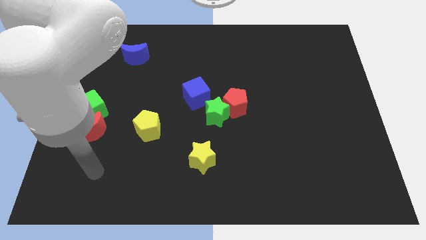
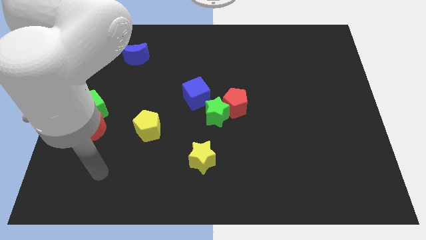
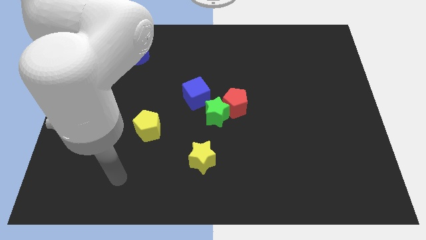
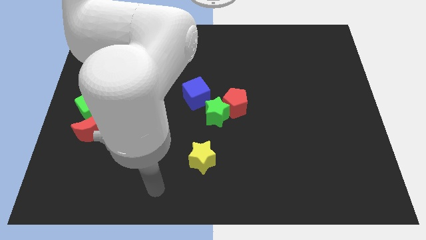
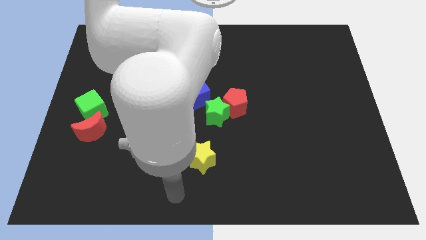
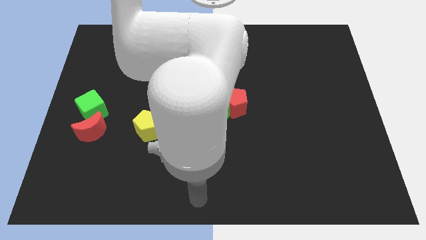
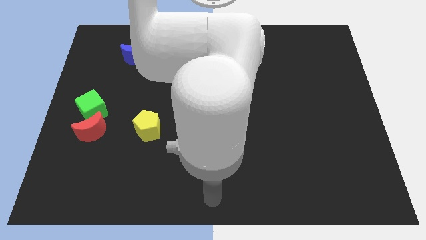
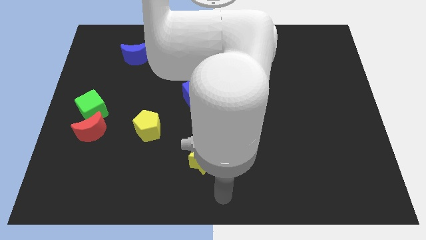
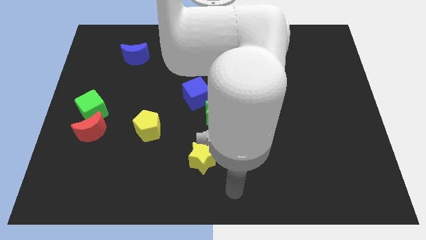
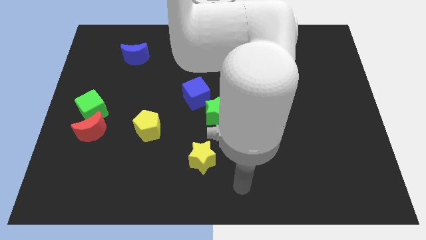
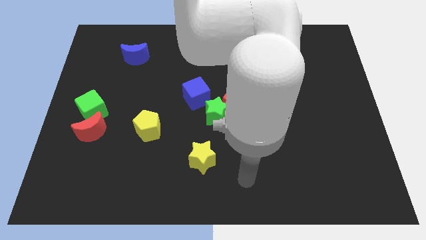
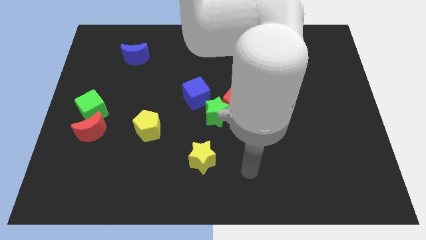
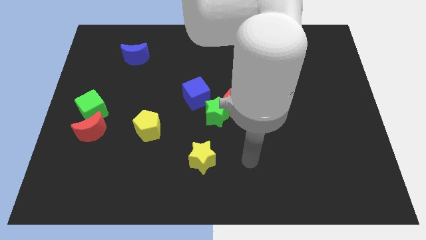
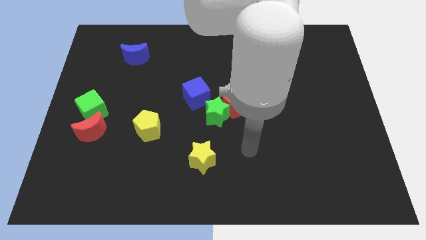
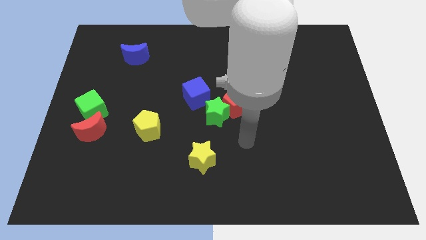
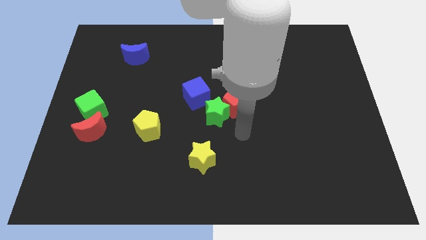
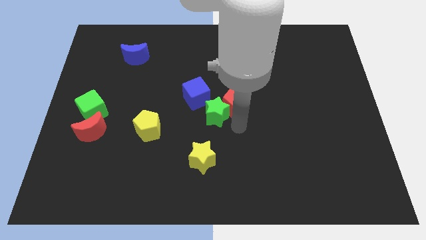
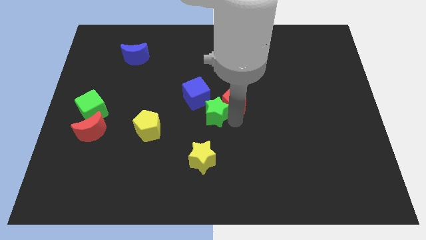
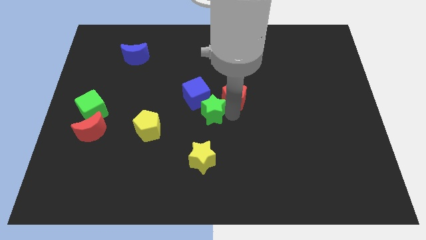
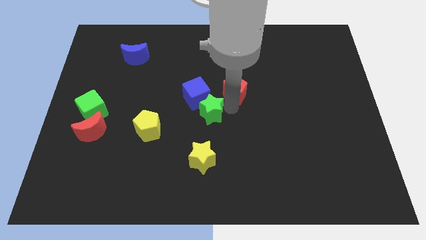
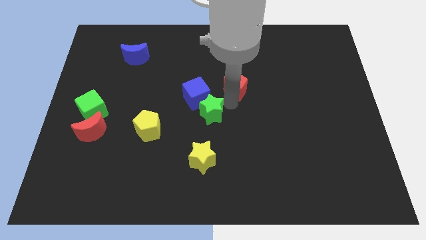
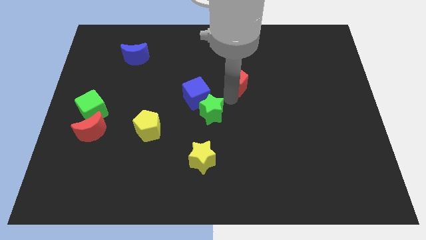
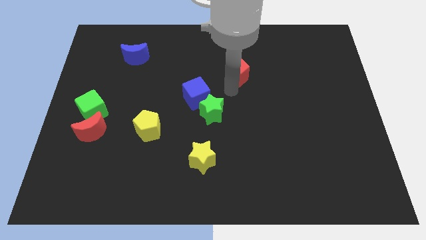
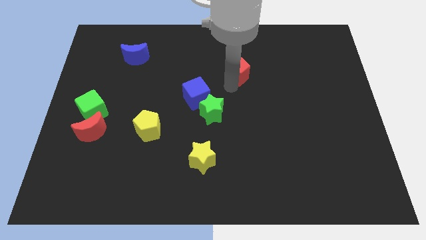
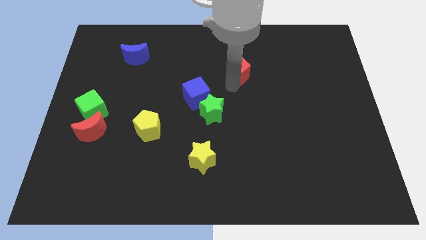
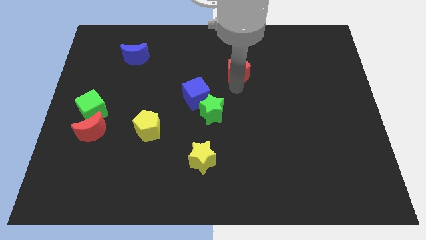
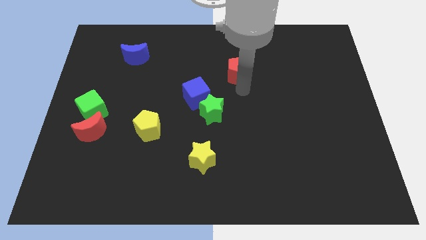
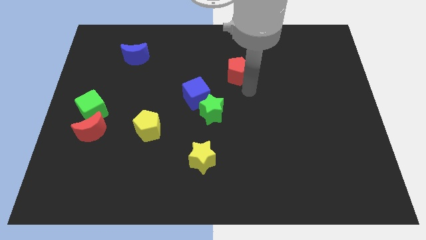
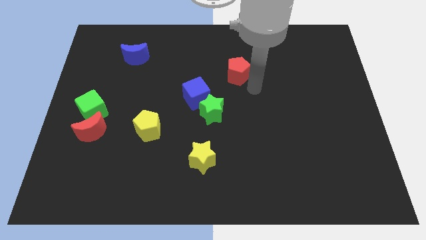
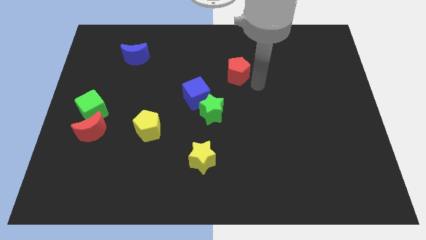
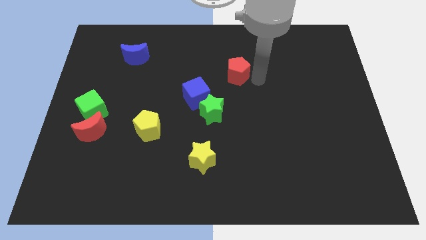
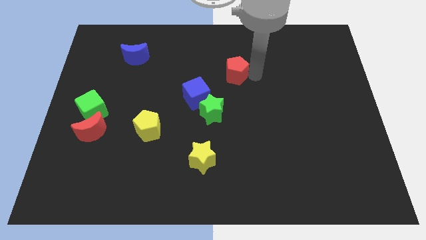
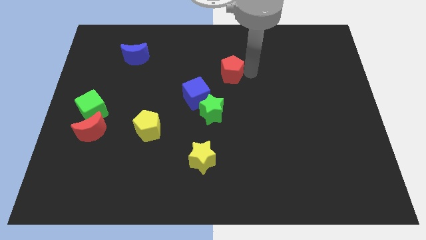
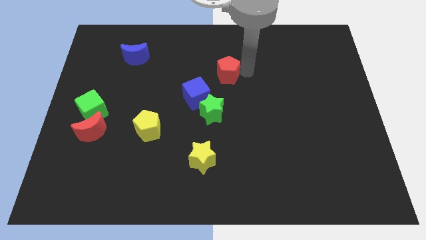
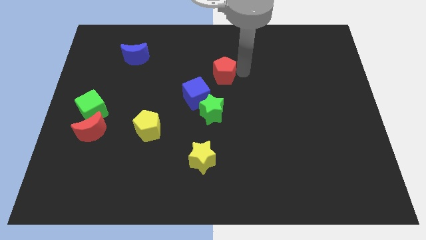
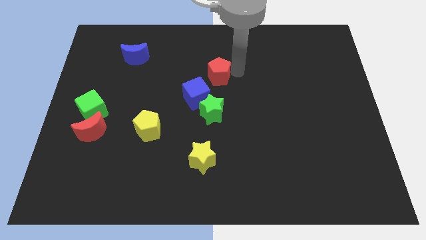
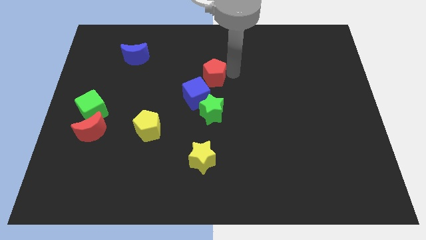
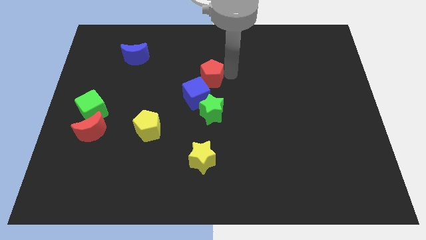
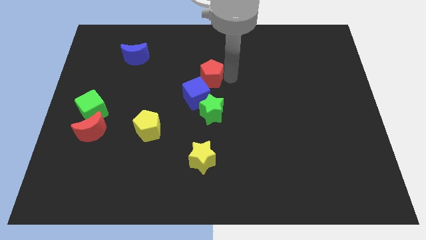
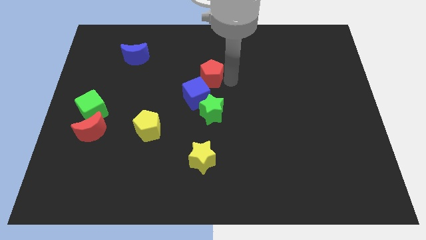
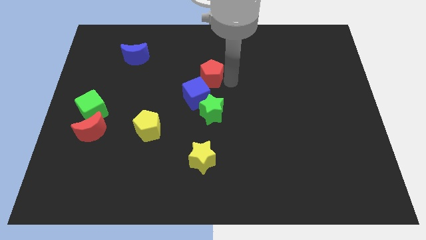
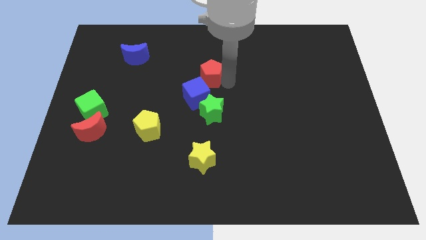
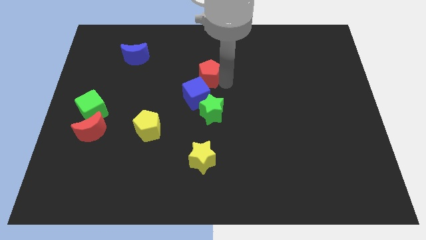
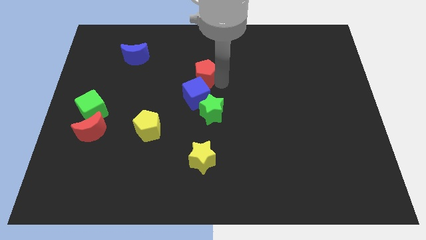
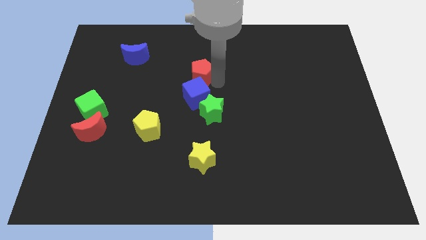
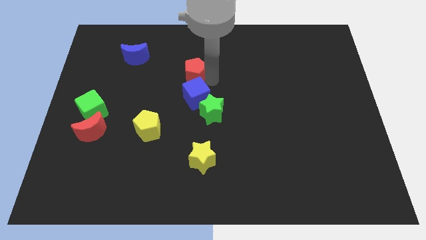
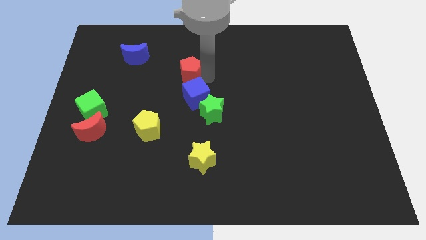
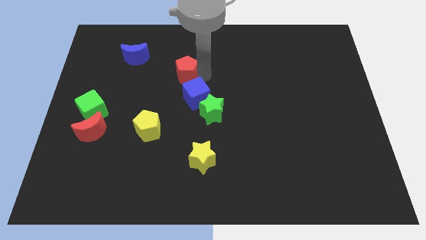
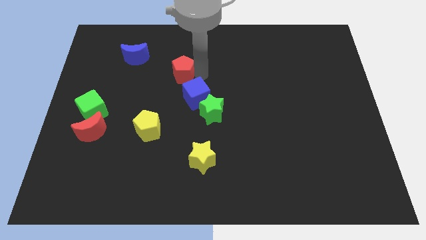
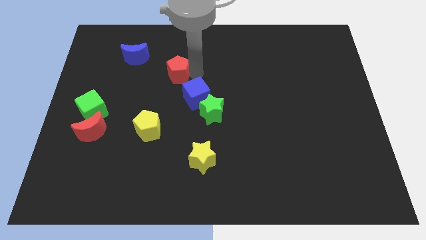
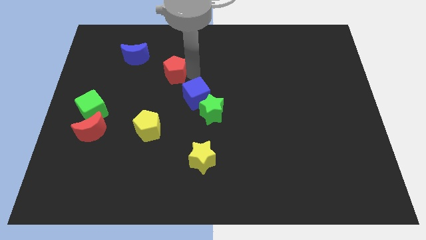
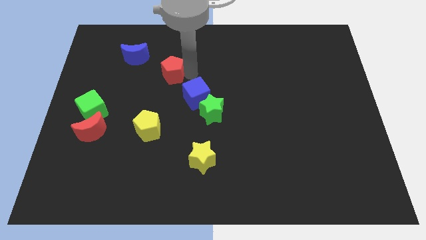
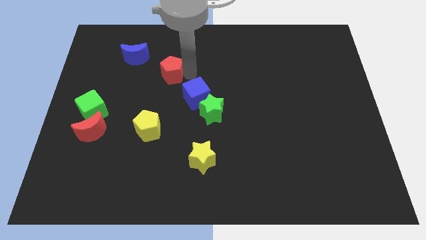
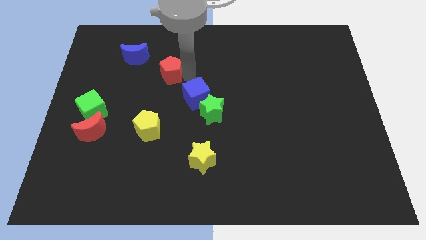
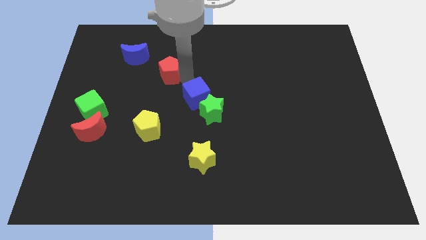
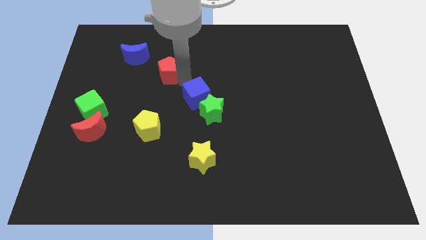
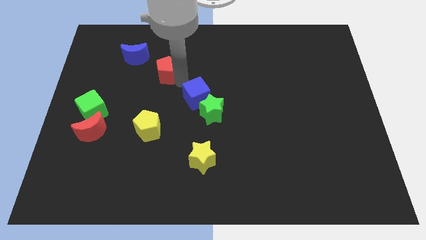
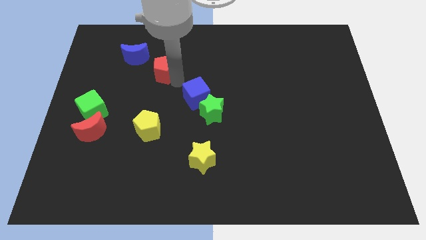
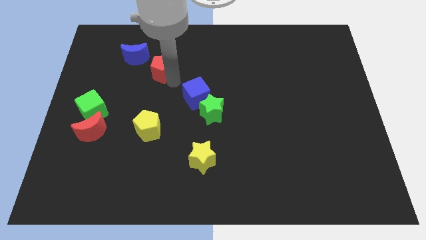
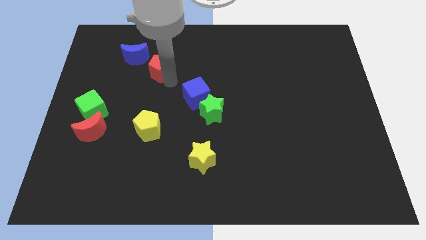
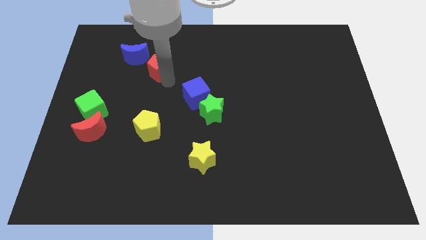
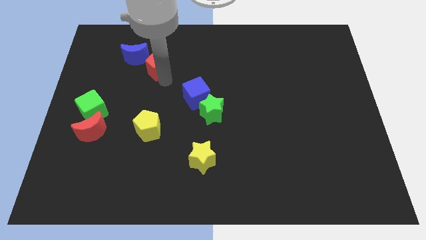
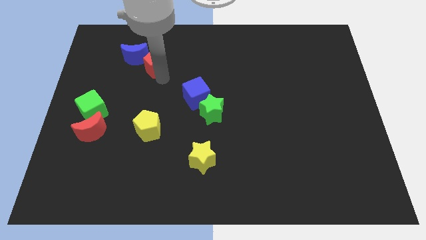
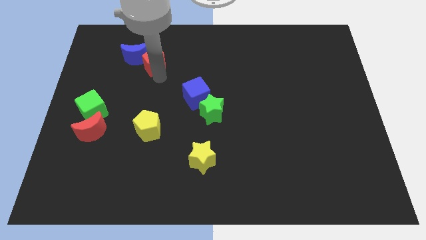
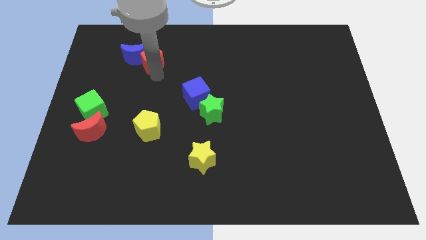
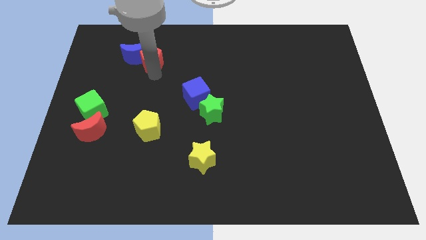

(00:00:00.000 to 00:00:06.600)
push the red pentagon close to the blue moon

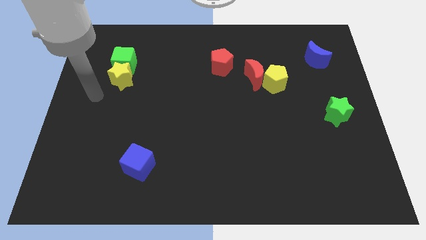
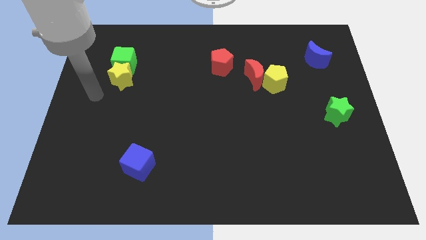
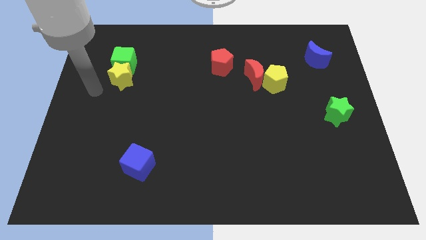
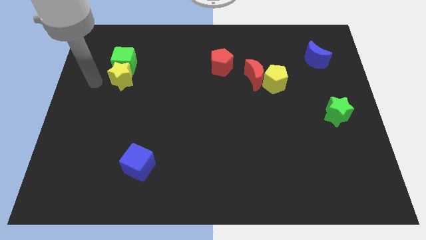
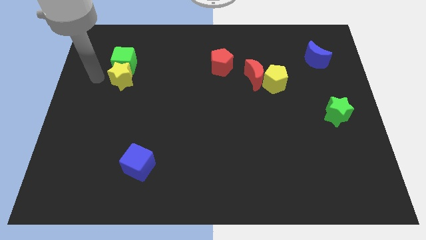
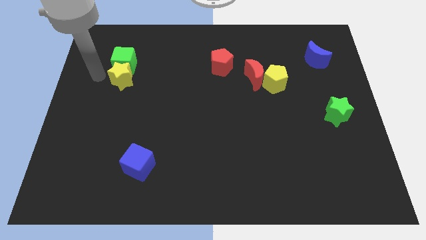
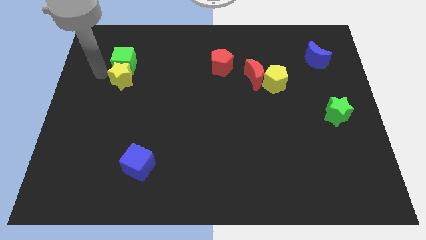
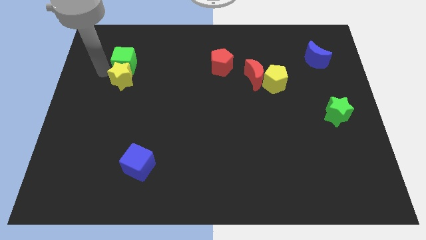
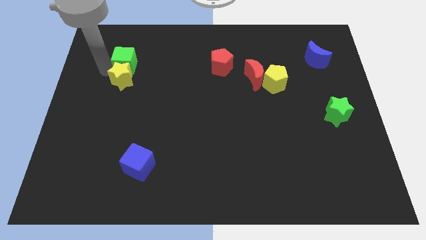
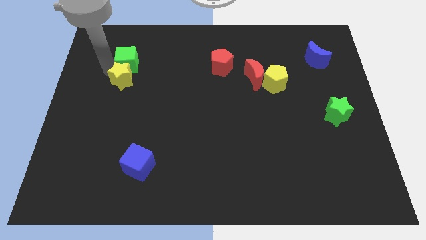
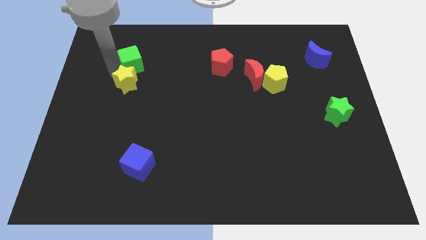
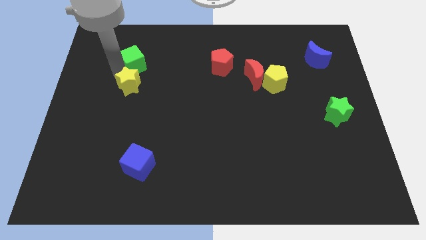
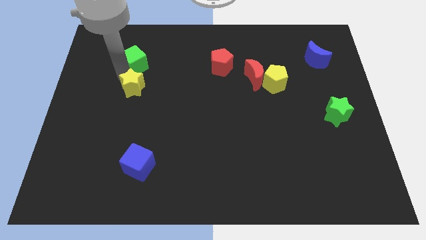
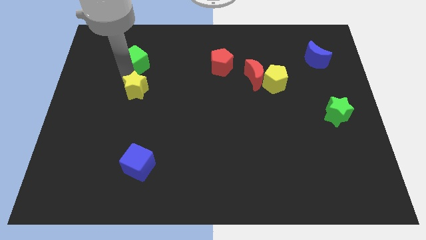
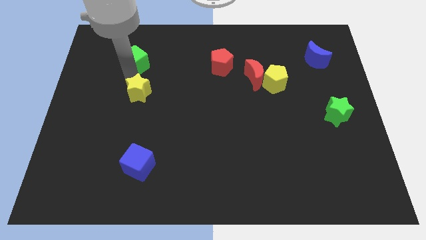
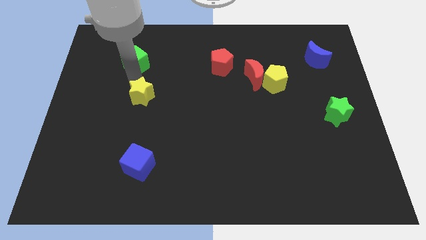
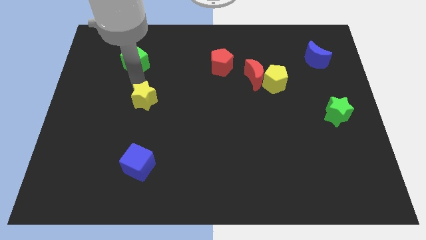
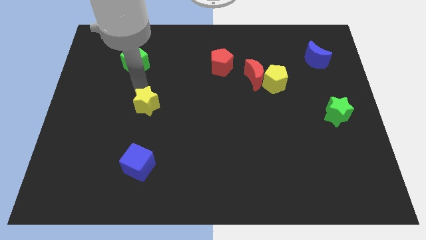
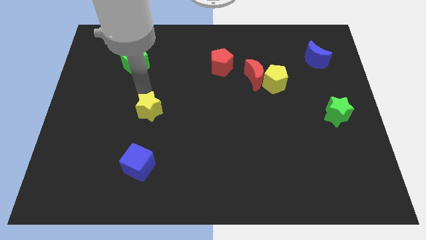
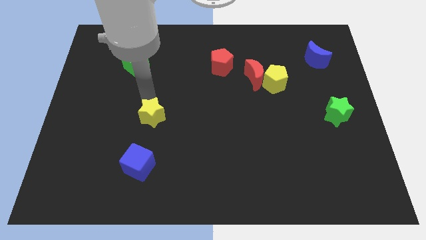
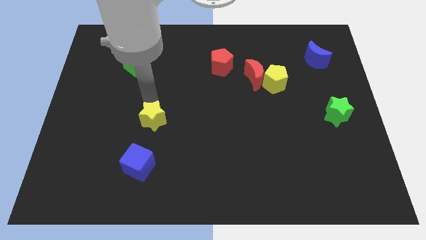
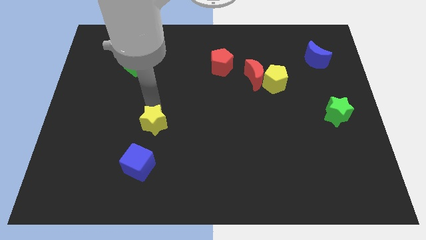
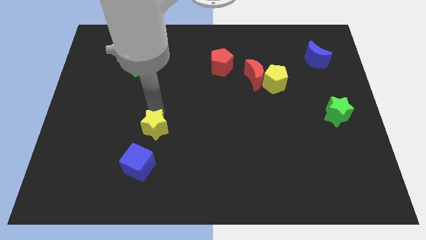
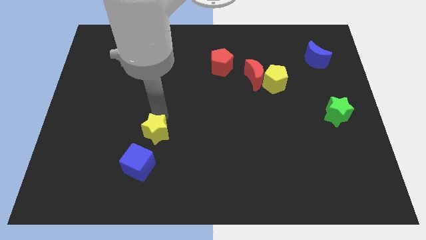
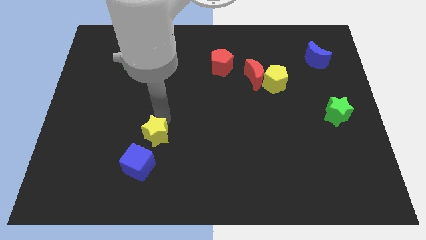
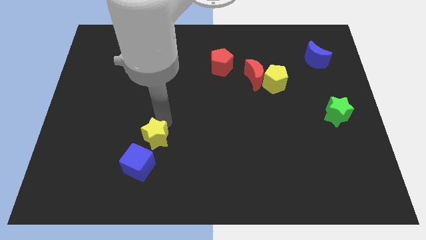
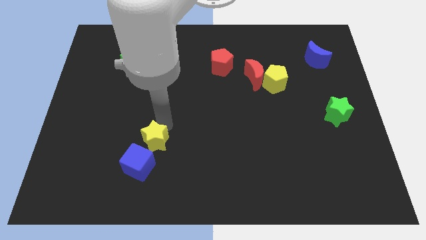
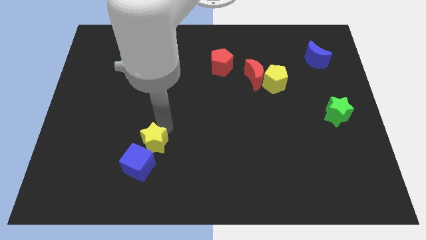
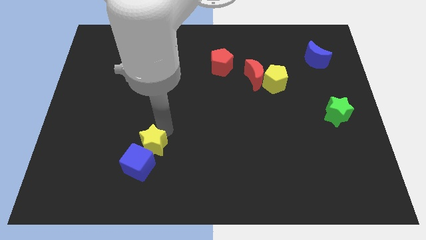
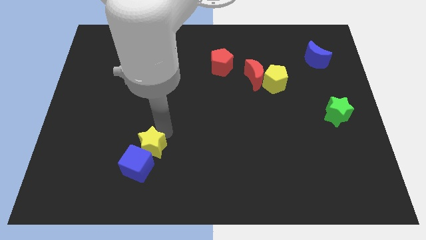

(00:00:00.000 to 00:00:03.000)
move the yellow star towards the blue cube
